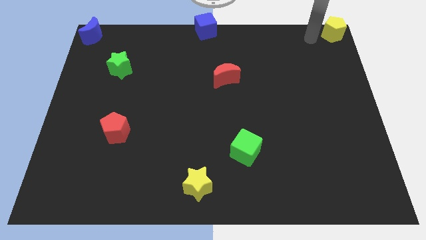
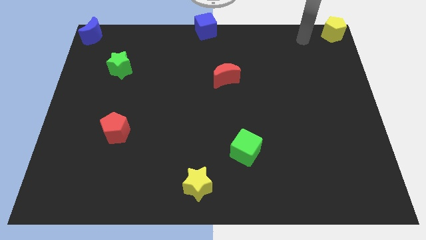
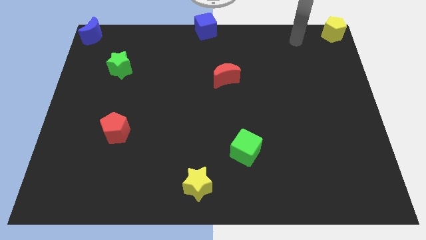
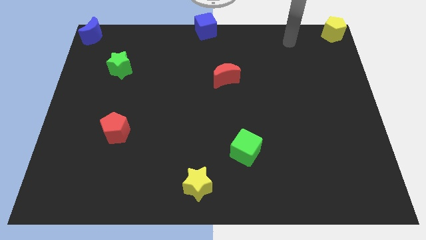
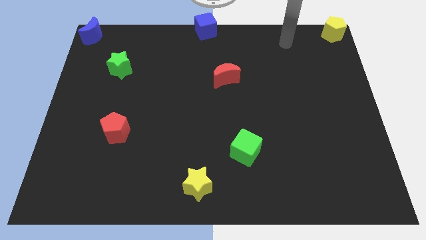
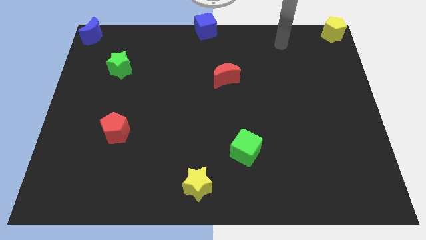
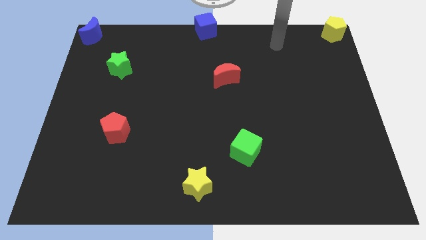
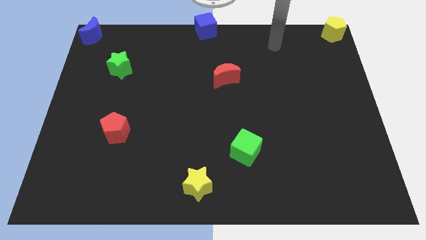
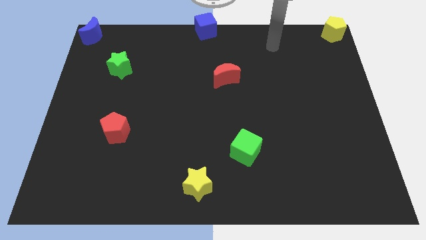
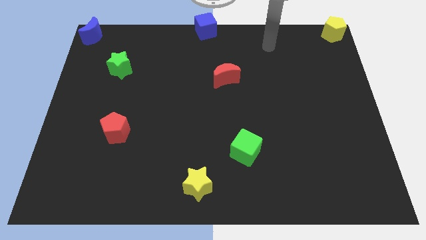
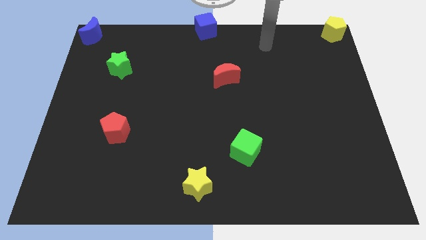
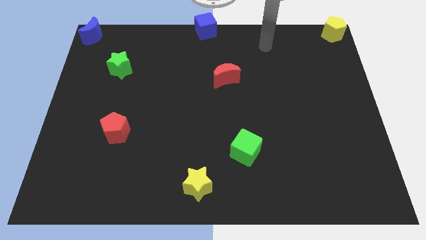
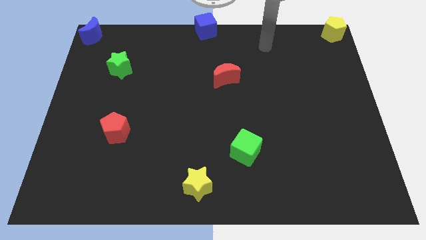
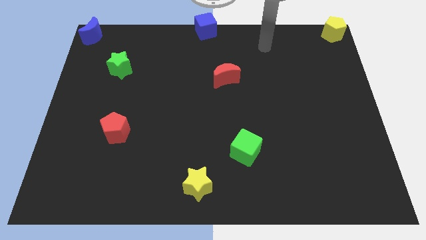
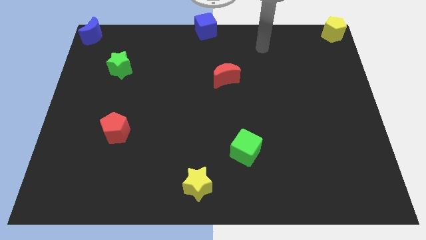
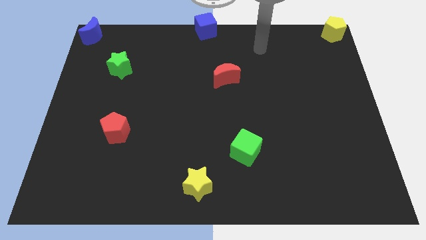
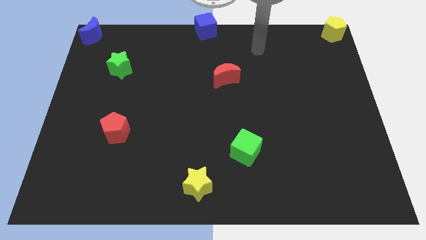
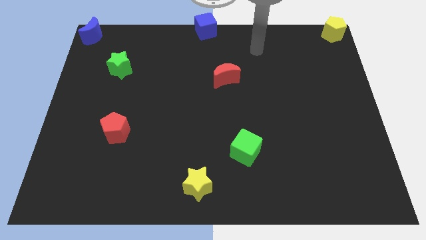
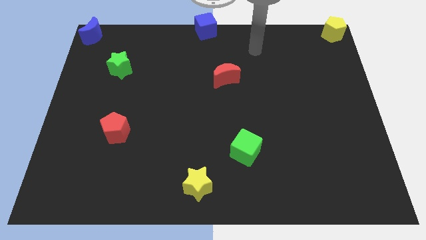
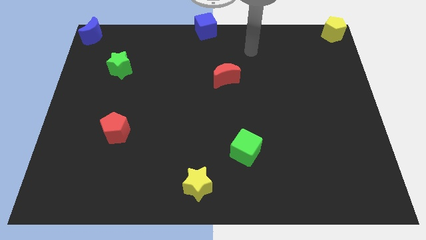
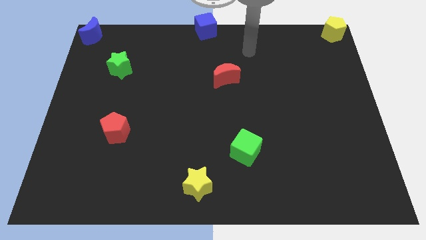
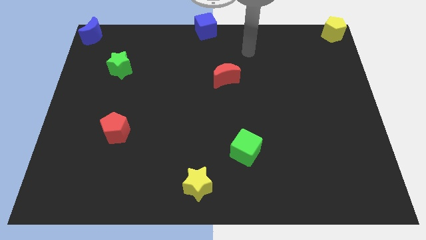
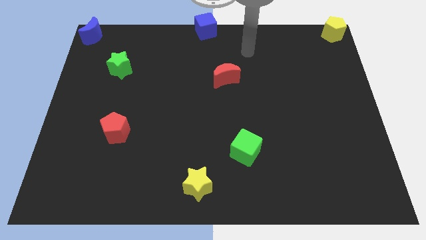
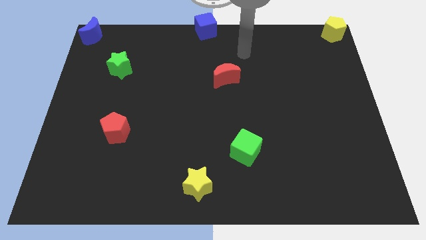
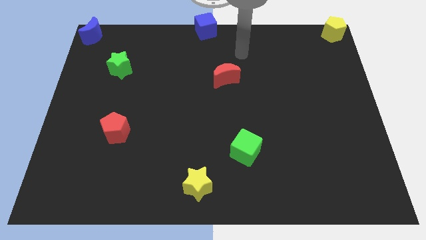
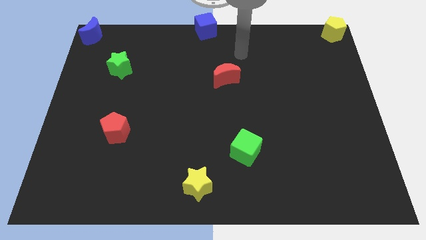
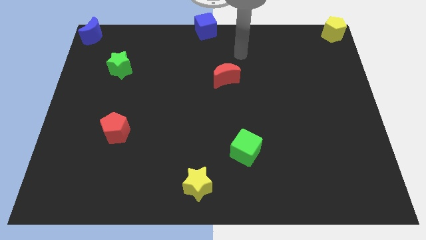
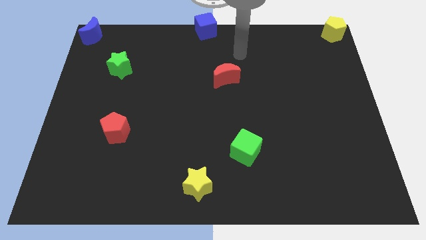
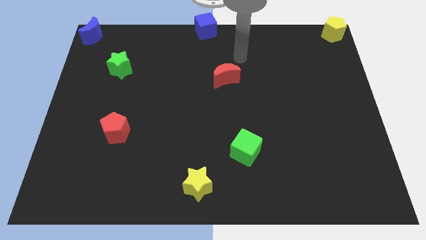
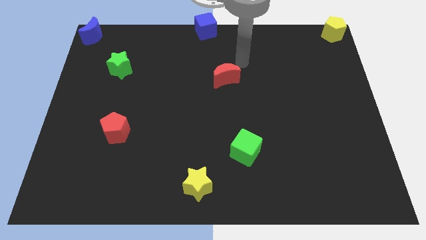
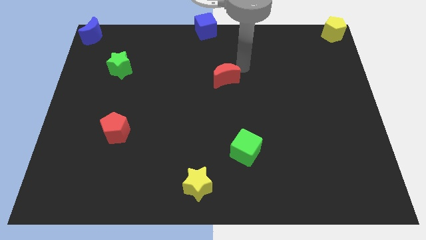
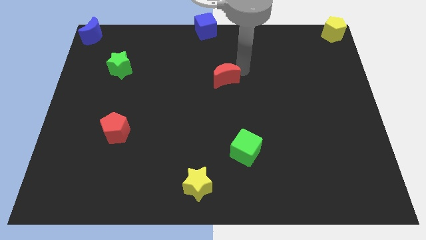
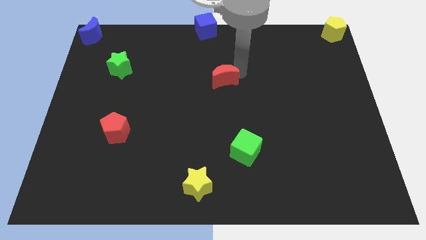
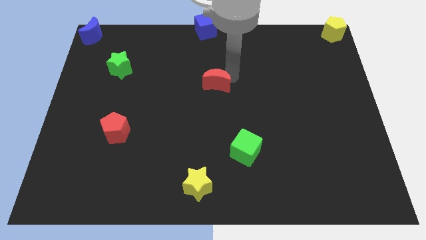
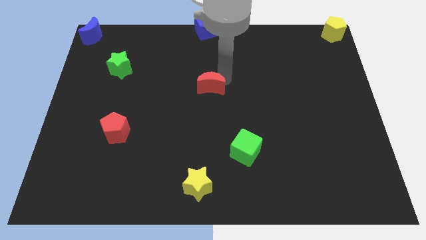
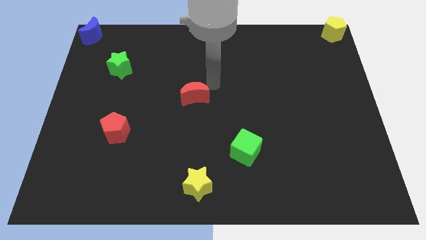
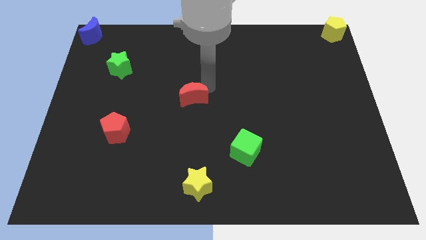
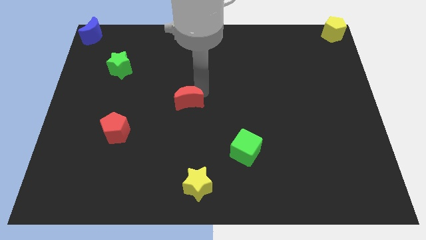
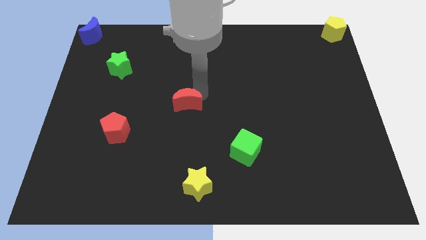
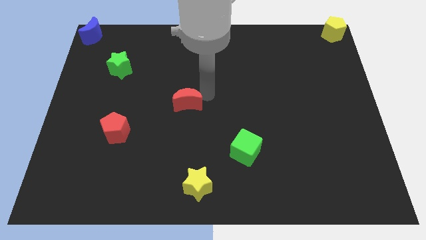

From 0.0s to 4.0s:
put the red crescent between the green star and green cube

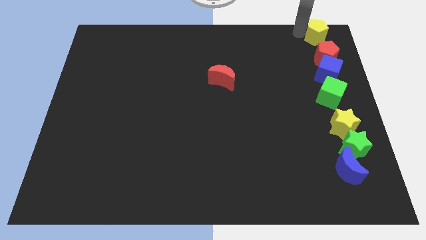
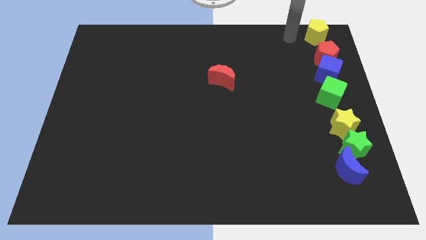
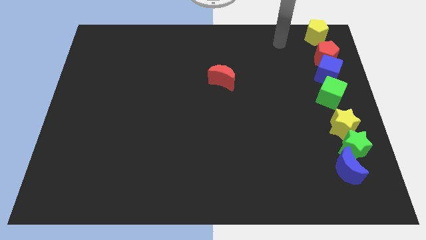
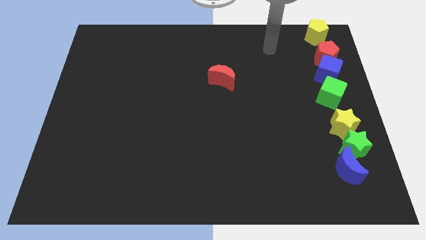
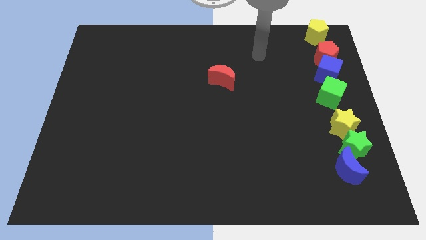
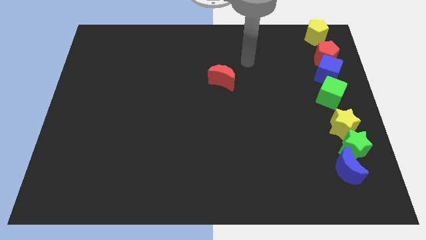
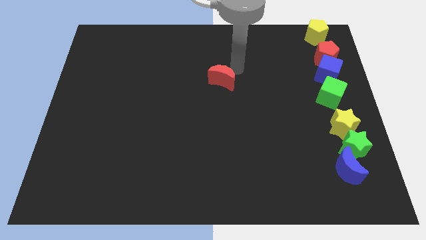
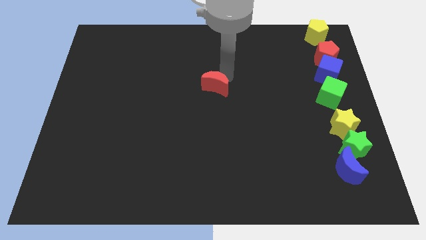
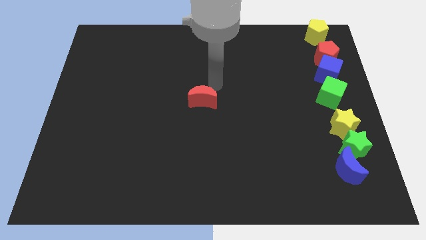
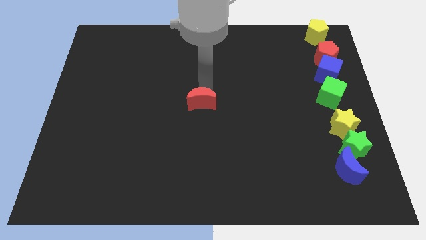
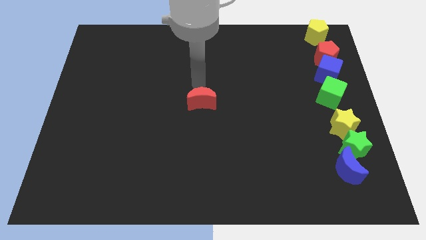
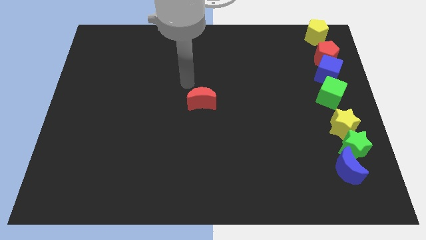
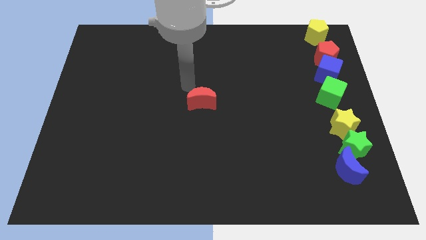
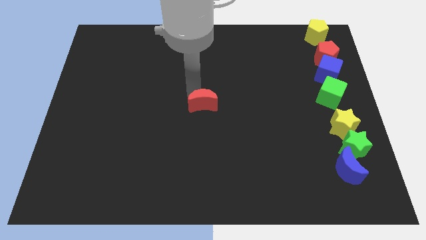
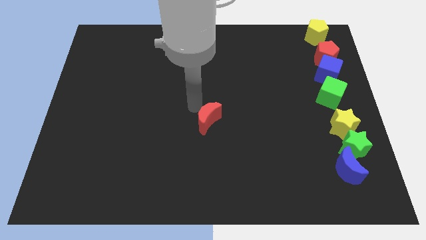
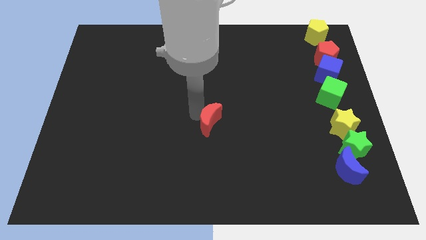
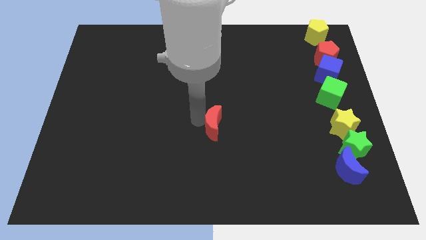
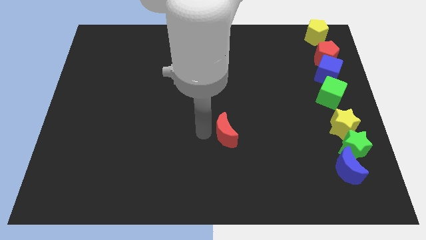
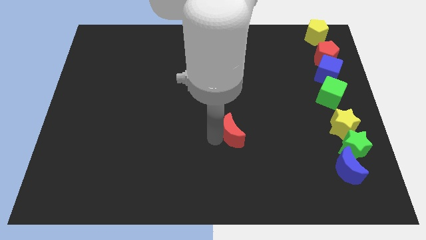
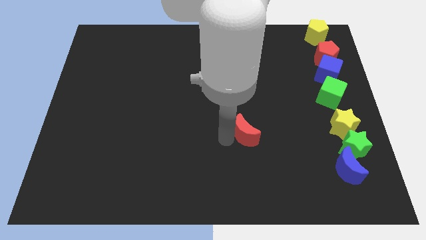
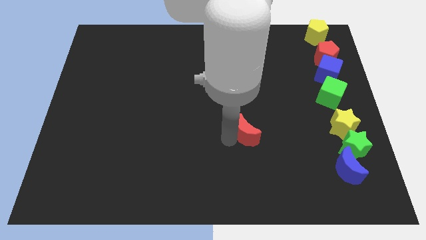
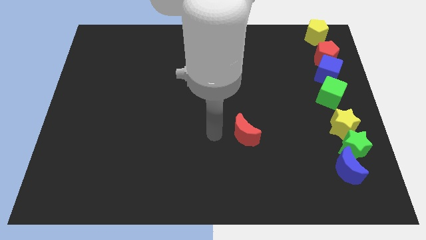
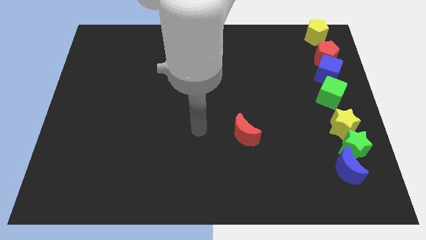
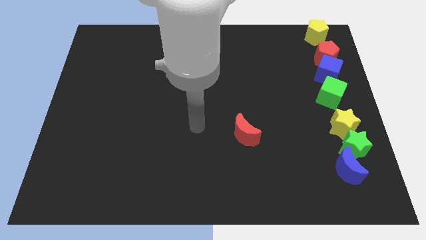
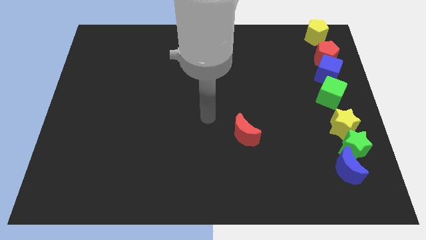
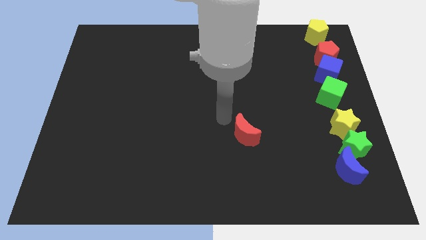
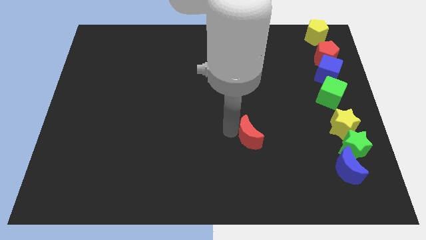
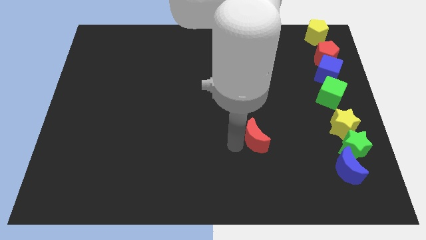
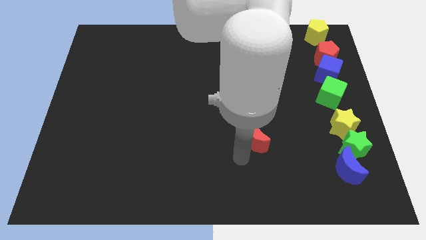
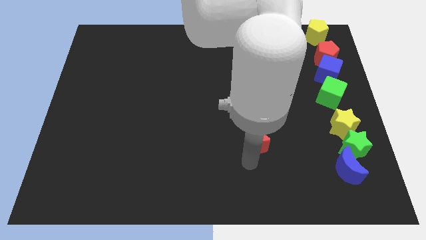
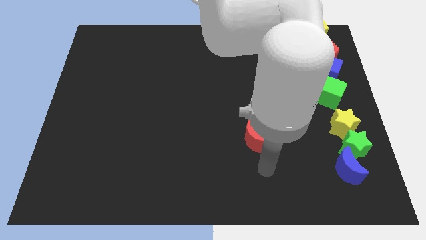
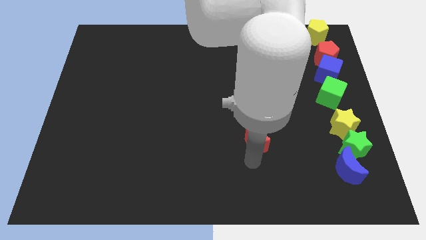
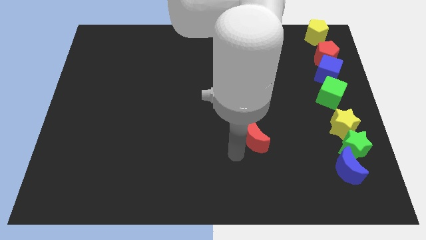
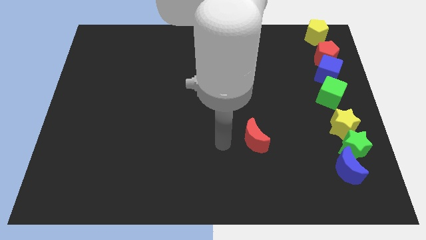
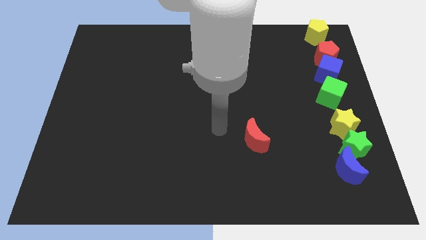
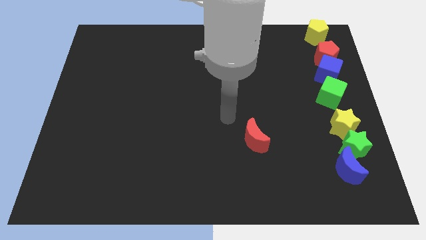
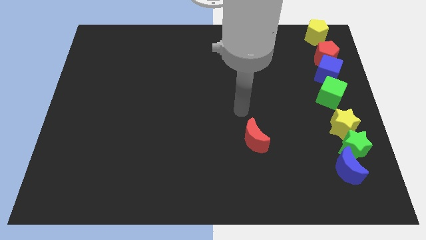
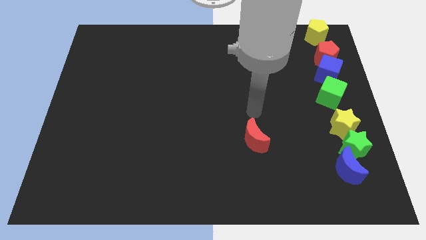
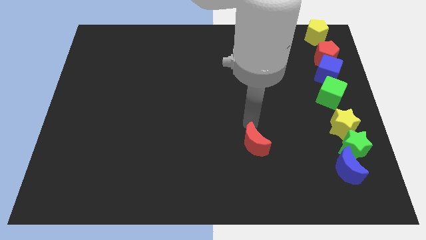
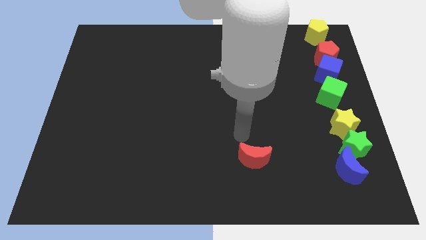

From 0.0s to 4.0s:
push the red crescent towards the bottom right side of the board

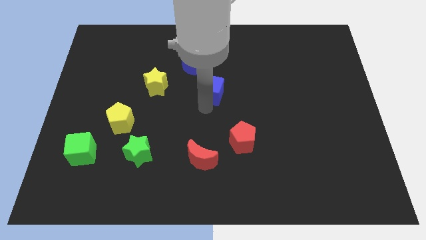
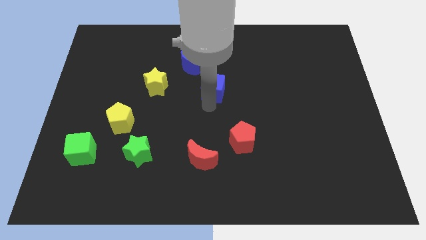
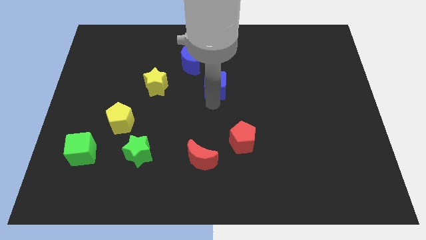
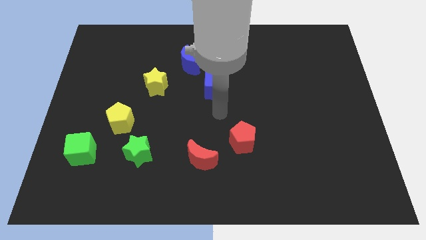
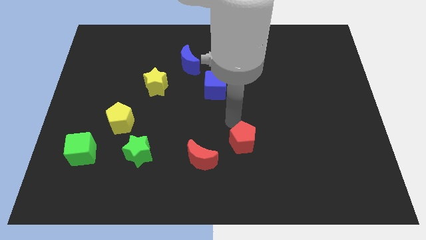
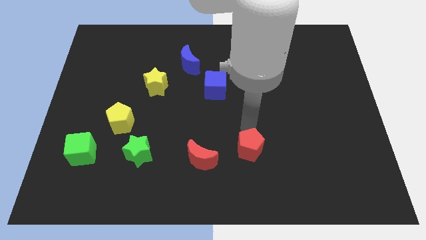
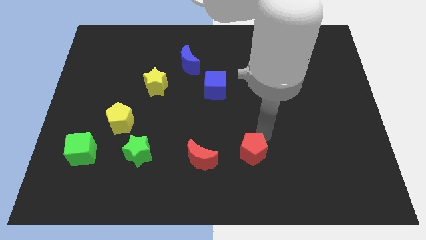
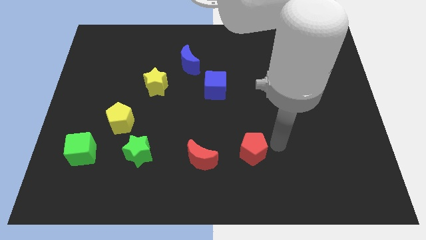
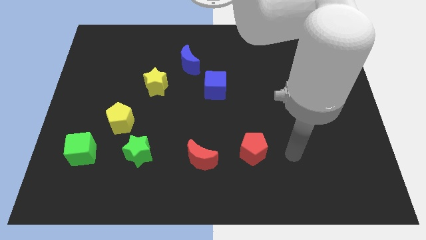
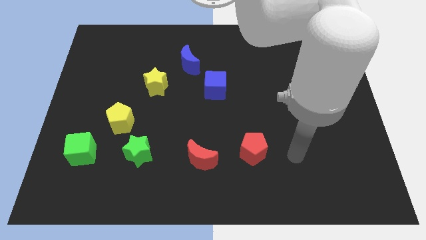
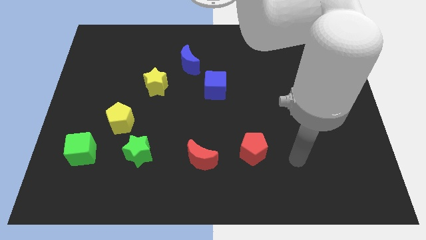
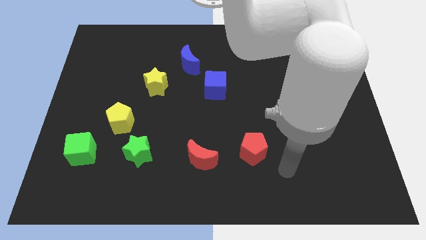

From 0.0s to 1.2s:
move your arm towards the right side of the red pentagon
